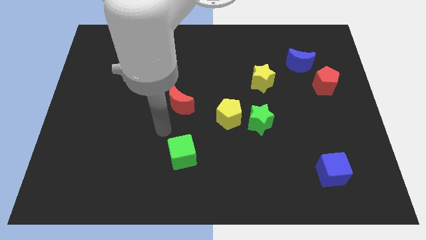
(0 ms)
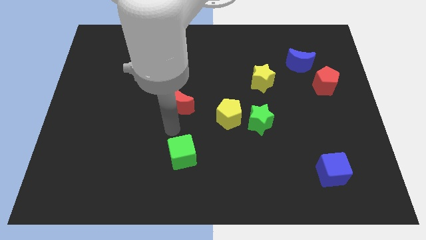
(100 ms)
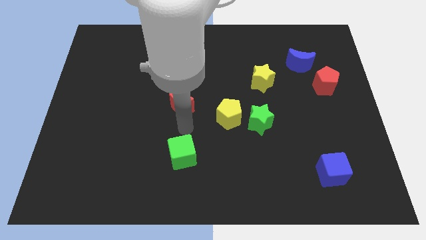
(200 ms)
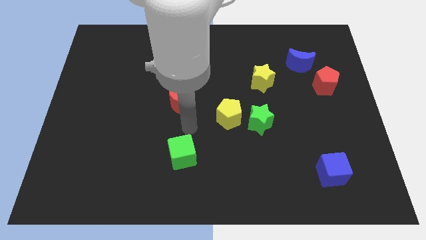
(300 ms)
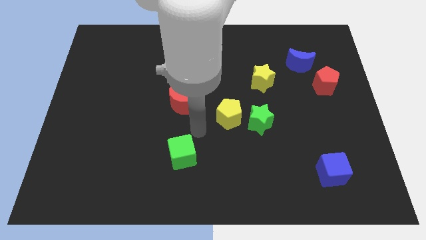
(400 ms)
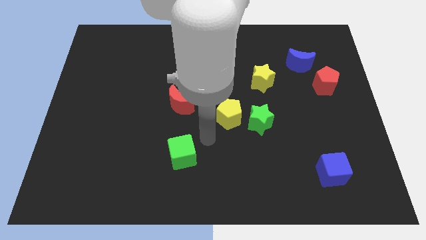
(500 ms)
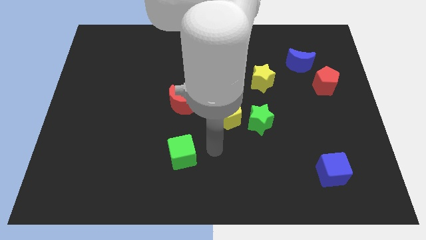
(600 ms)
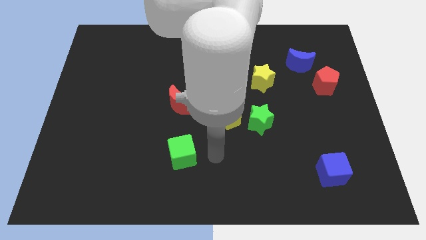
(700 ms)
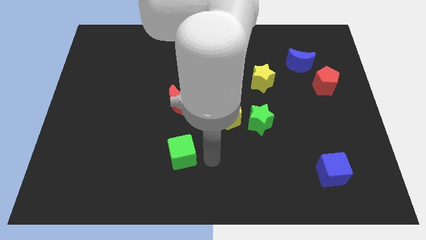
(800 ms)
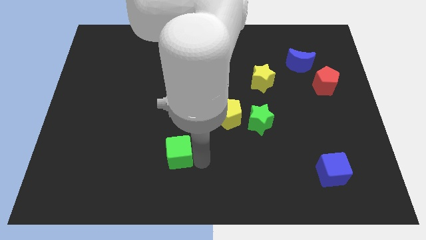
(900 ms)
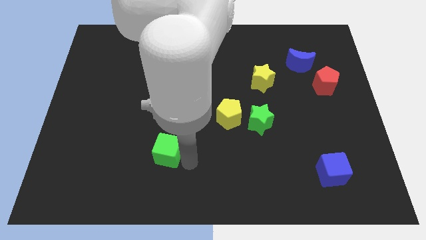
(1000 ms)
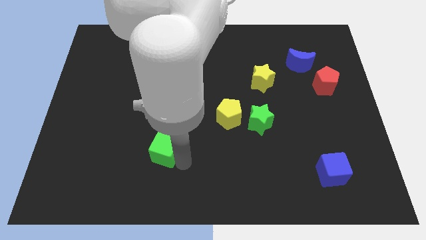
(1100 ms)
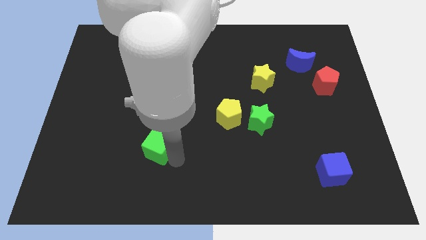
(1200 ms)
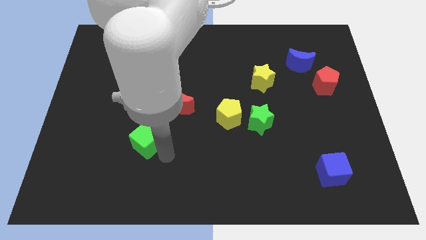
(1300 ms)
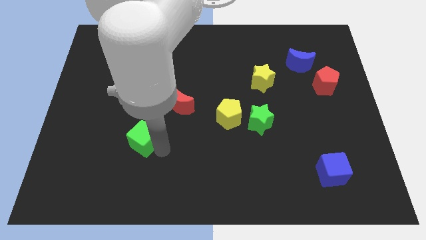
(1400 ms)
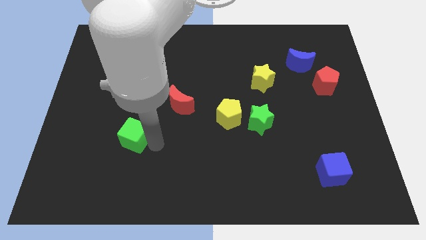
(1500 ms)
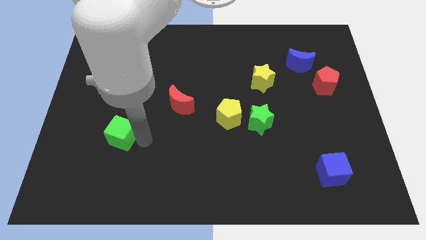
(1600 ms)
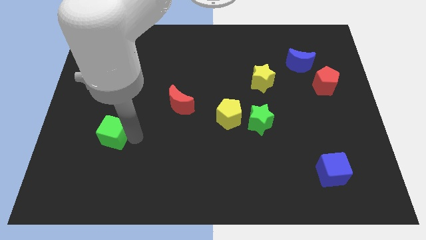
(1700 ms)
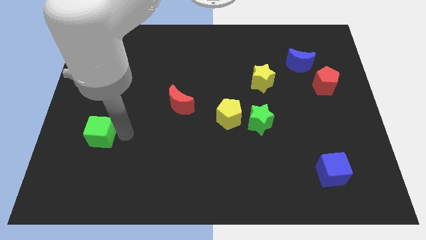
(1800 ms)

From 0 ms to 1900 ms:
push the green cube towards the left side of the board

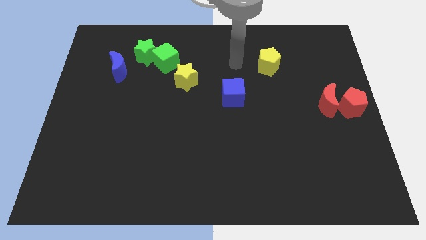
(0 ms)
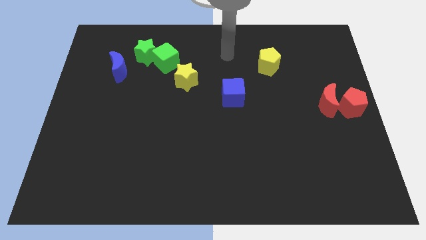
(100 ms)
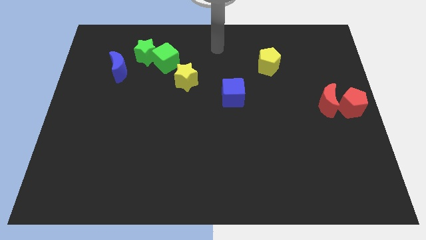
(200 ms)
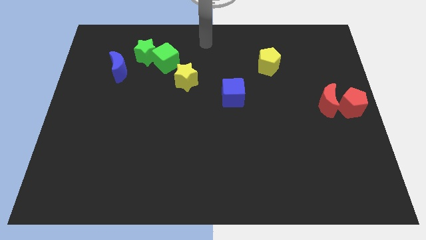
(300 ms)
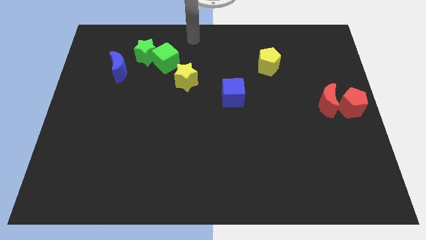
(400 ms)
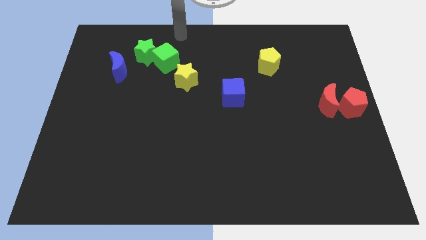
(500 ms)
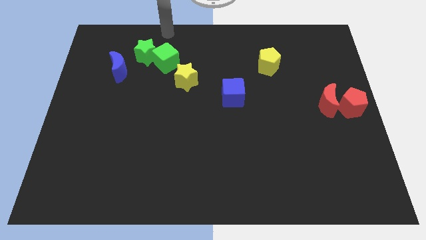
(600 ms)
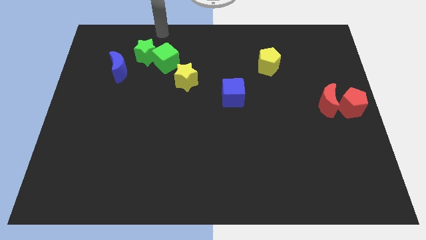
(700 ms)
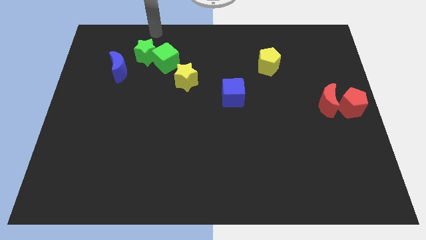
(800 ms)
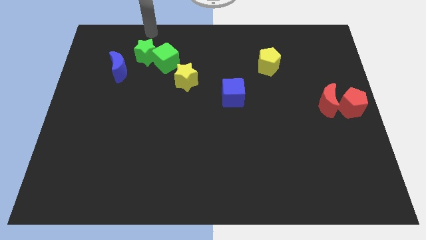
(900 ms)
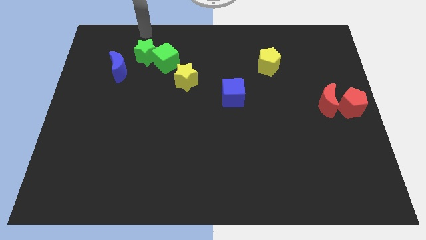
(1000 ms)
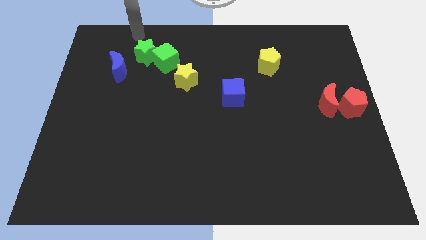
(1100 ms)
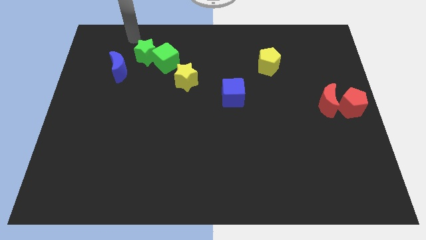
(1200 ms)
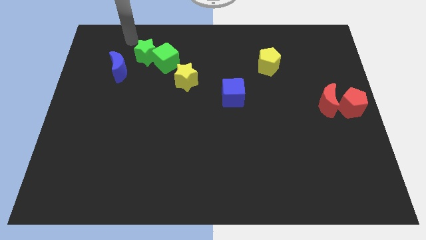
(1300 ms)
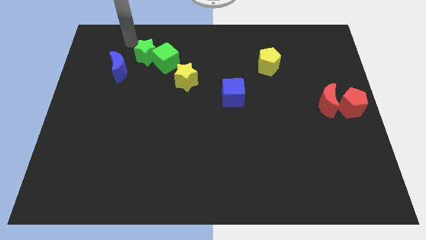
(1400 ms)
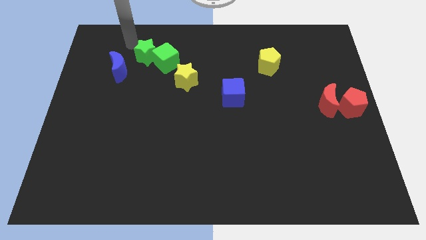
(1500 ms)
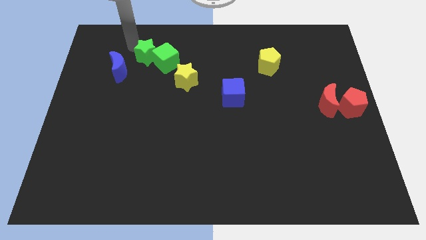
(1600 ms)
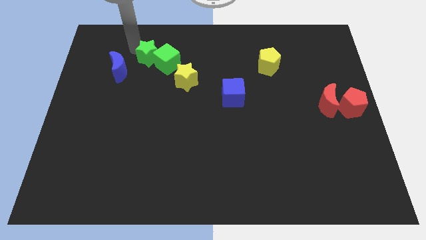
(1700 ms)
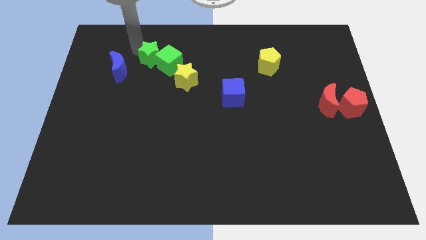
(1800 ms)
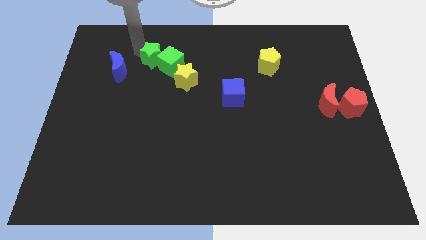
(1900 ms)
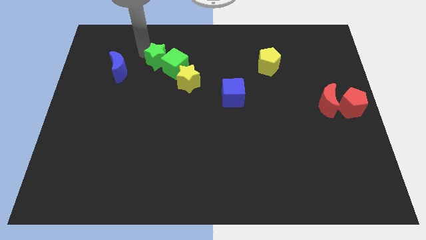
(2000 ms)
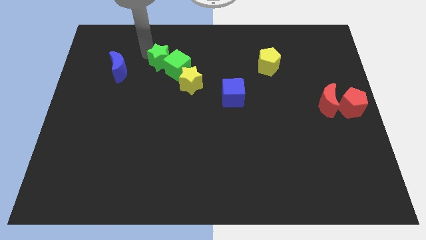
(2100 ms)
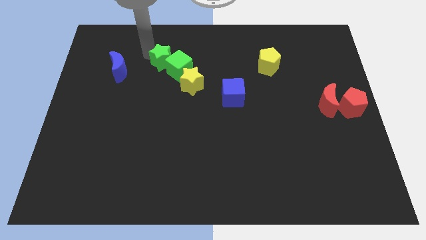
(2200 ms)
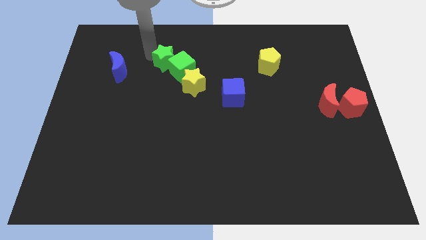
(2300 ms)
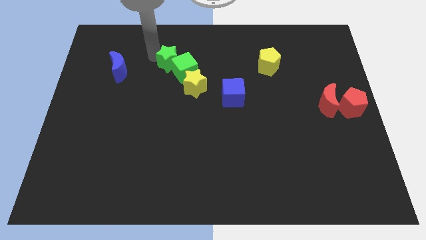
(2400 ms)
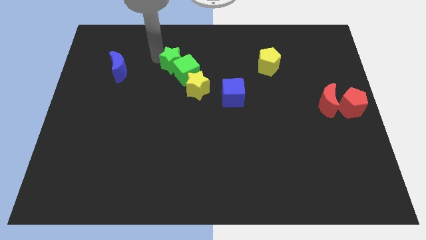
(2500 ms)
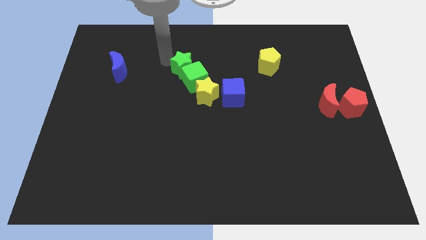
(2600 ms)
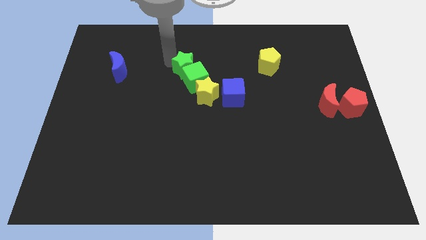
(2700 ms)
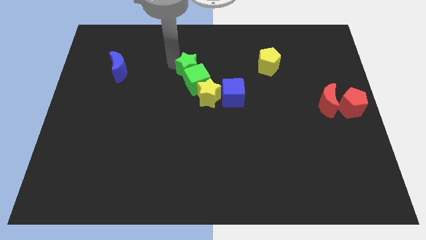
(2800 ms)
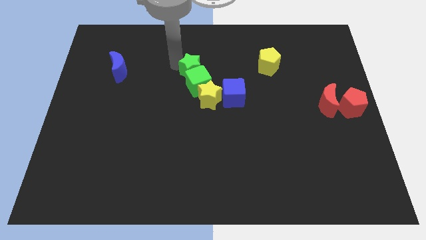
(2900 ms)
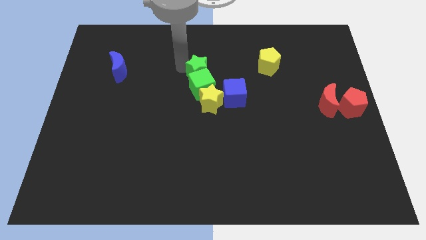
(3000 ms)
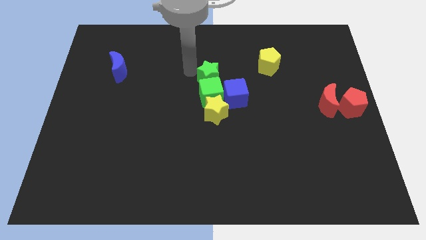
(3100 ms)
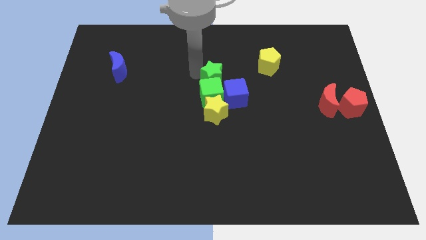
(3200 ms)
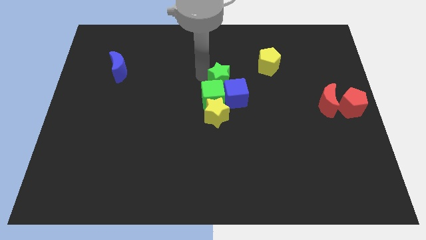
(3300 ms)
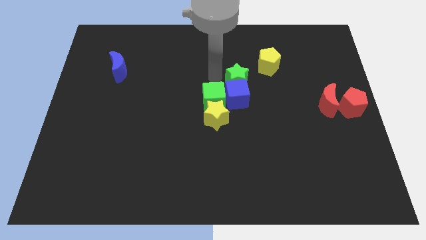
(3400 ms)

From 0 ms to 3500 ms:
place the green cube left to the blue cube

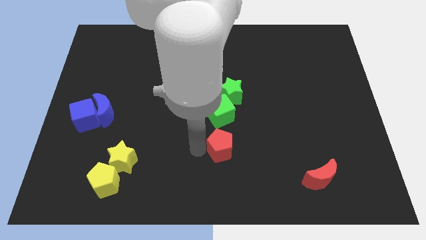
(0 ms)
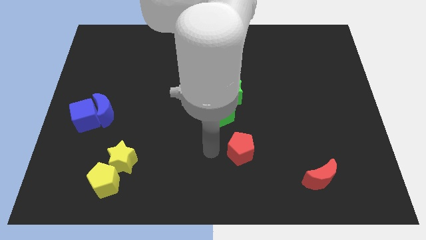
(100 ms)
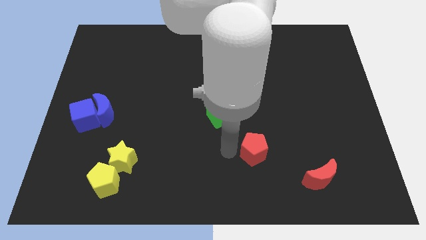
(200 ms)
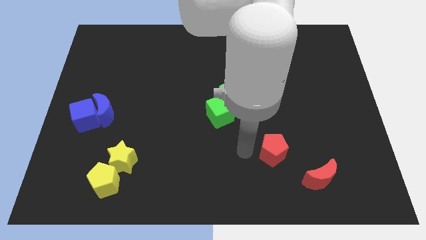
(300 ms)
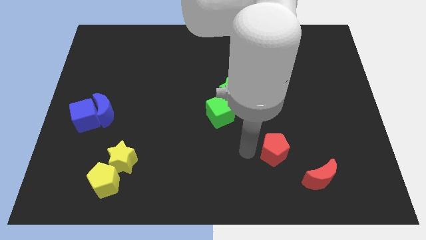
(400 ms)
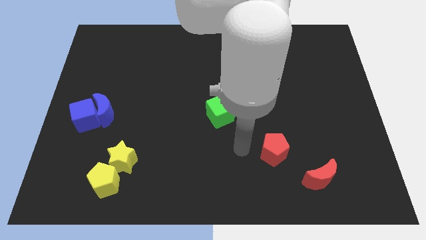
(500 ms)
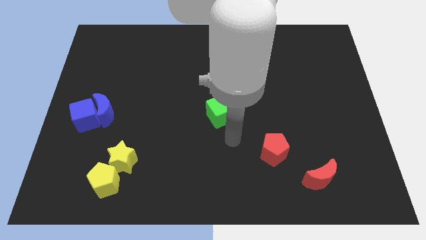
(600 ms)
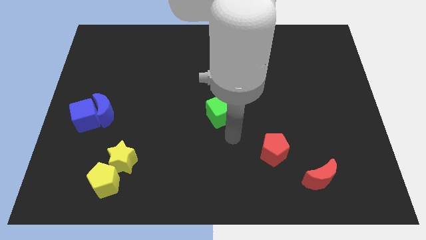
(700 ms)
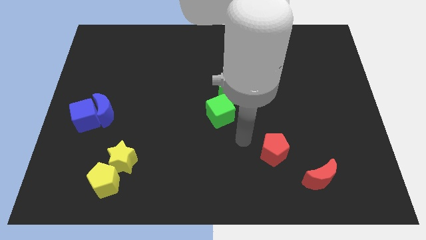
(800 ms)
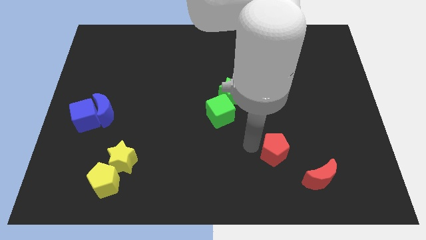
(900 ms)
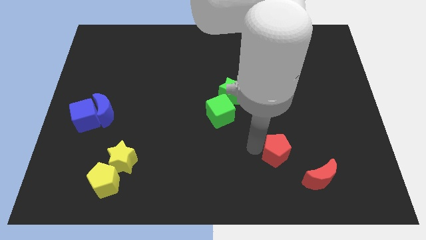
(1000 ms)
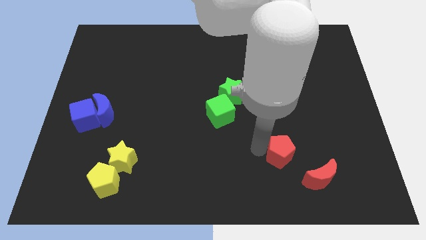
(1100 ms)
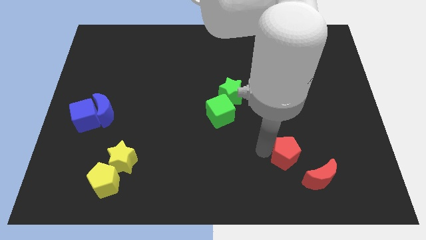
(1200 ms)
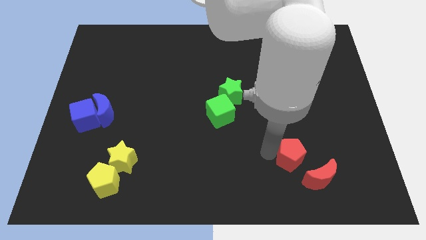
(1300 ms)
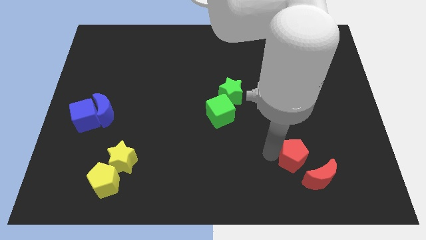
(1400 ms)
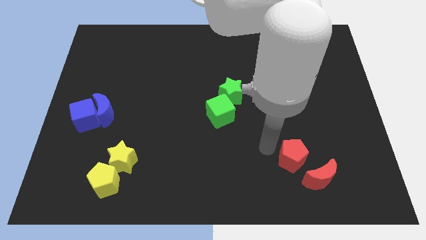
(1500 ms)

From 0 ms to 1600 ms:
move the red pentagon slightly towards the red crescent

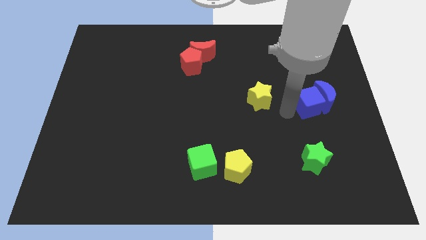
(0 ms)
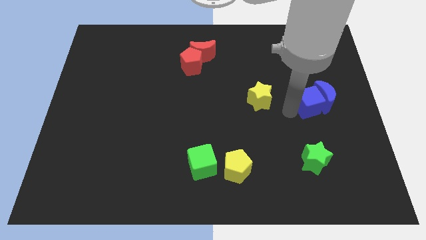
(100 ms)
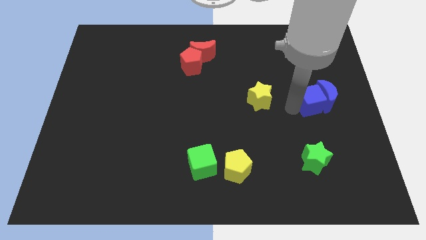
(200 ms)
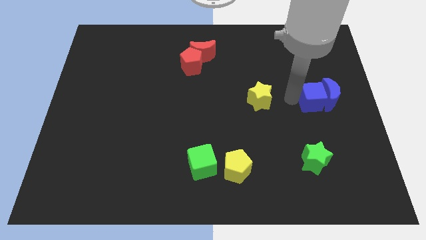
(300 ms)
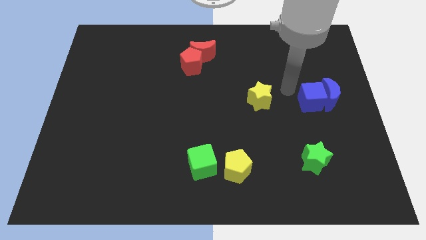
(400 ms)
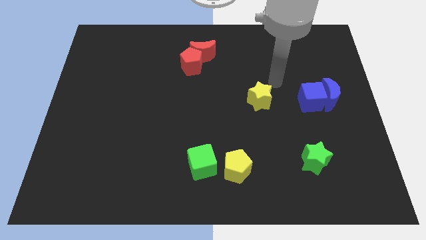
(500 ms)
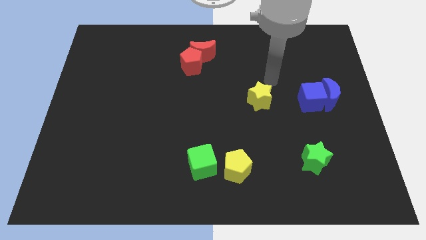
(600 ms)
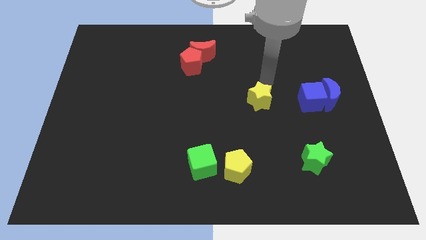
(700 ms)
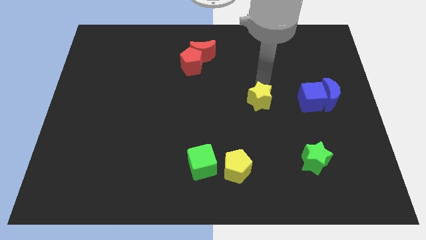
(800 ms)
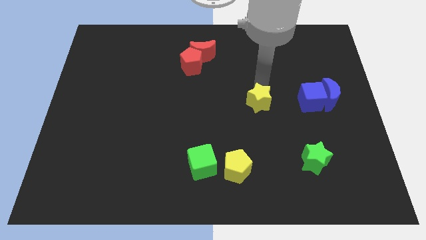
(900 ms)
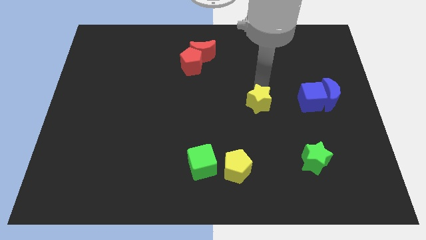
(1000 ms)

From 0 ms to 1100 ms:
touch the yellow star with your arm

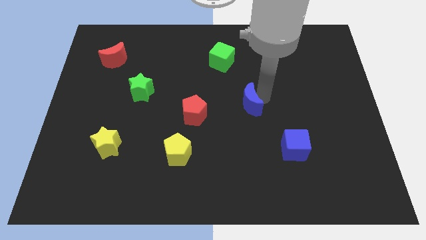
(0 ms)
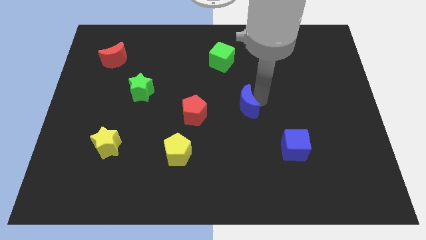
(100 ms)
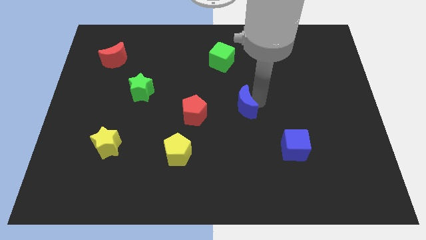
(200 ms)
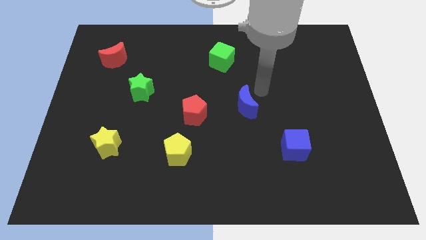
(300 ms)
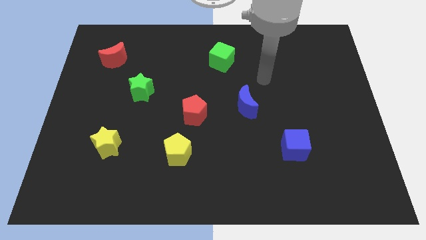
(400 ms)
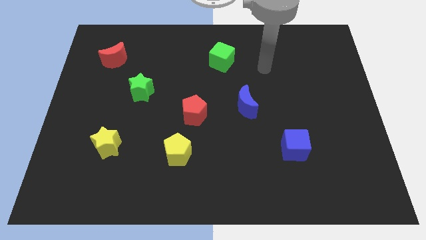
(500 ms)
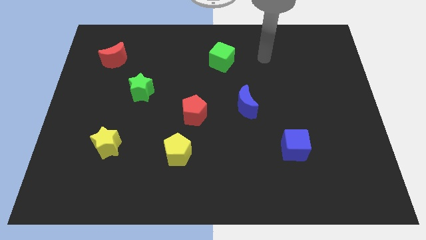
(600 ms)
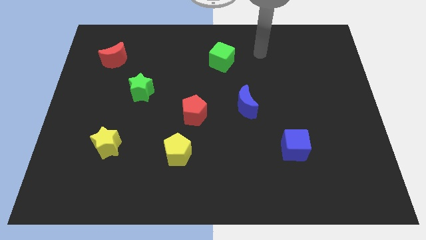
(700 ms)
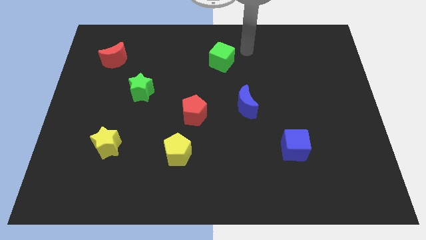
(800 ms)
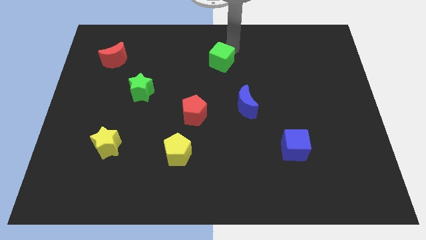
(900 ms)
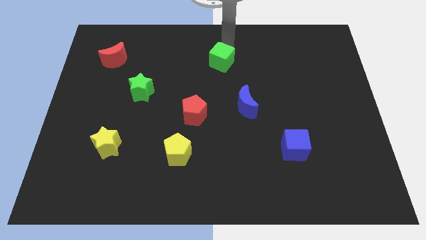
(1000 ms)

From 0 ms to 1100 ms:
push the blue crescent parallel to the right of the red pentagon
